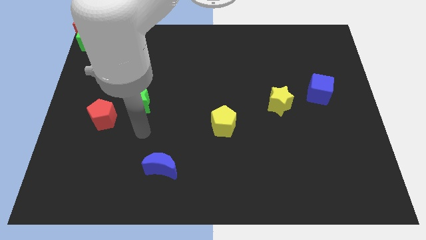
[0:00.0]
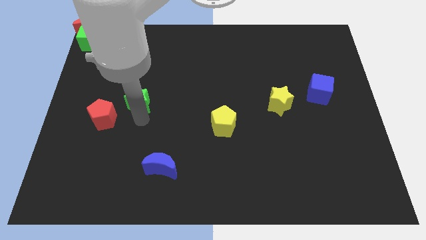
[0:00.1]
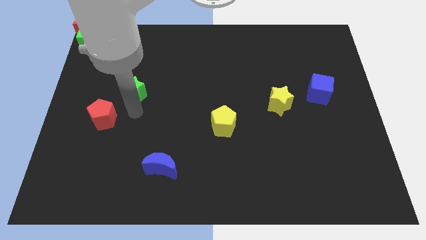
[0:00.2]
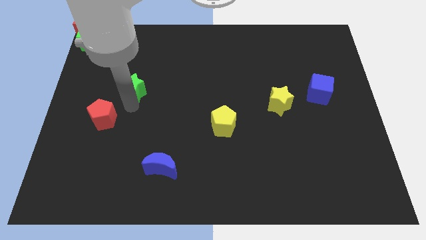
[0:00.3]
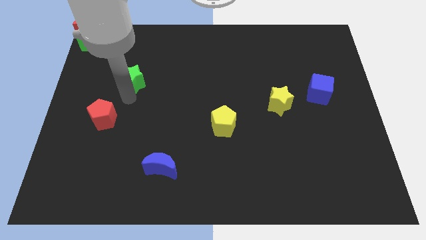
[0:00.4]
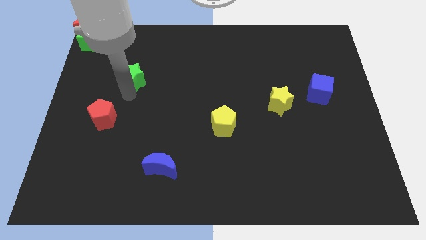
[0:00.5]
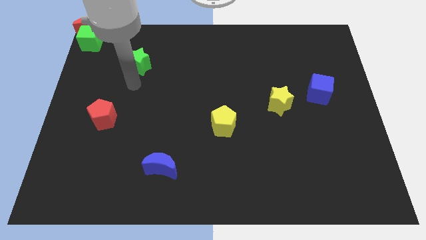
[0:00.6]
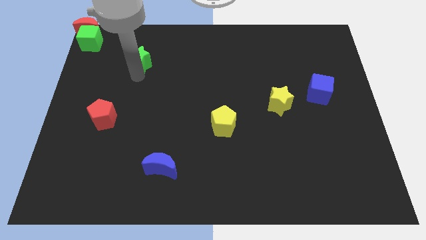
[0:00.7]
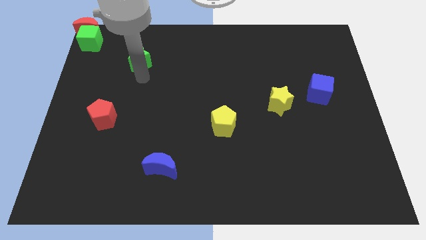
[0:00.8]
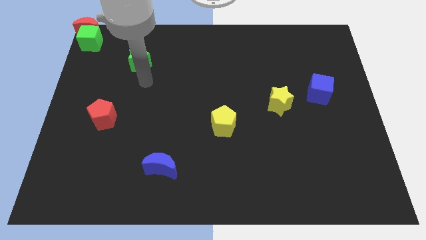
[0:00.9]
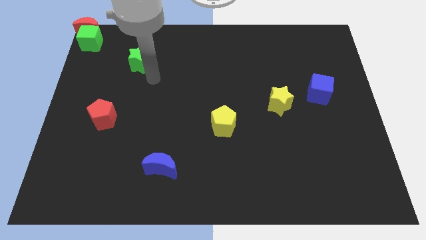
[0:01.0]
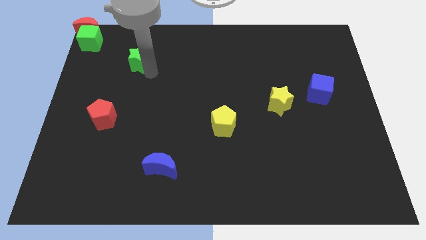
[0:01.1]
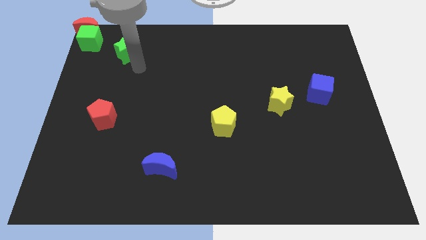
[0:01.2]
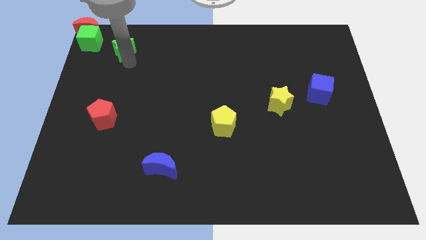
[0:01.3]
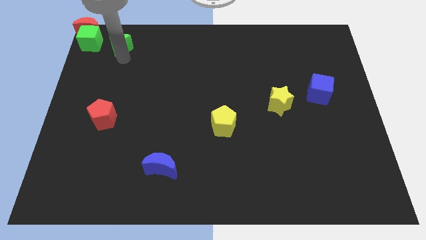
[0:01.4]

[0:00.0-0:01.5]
push the green star towards the green cube

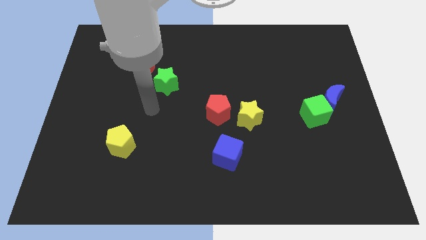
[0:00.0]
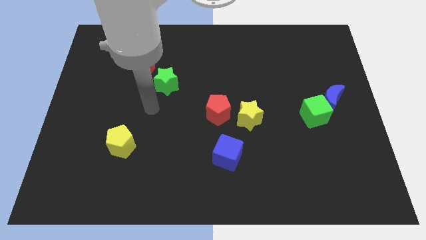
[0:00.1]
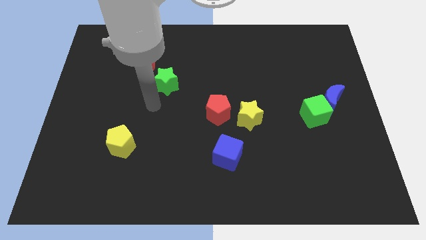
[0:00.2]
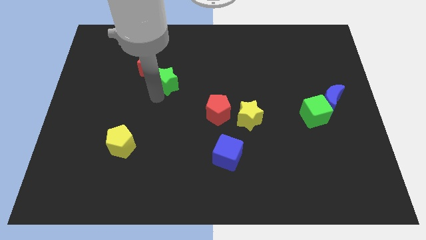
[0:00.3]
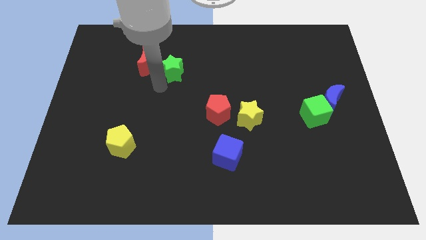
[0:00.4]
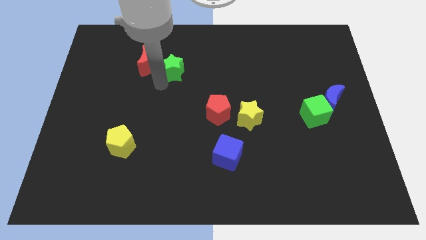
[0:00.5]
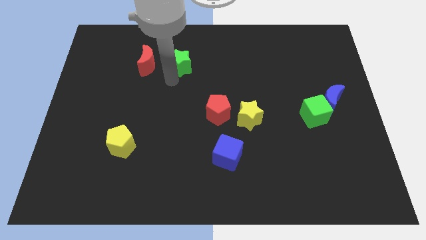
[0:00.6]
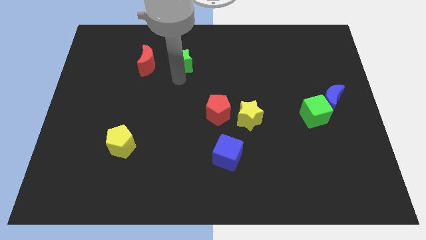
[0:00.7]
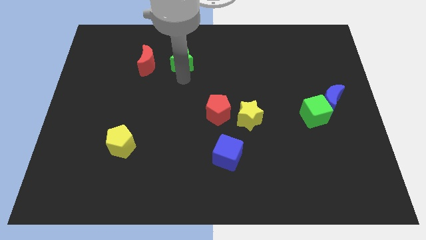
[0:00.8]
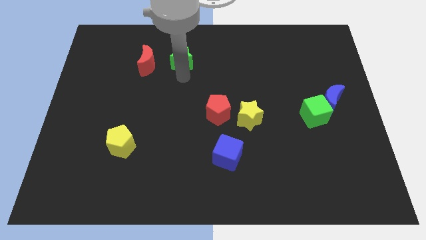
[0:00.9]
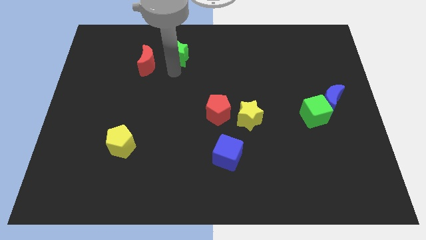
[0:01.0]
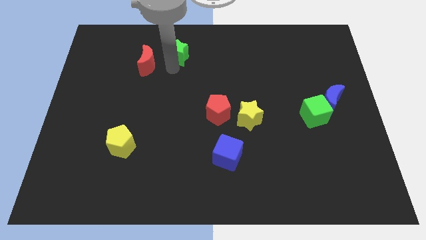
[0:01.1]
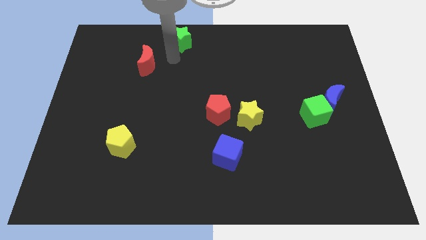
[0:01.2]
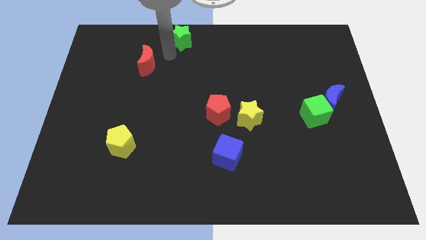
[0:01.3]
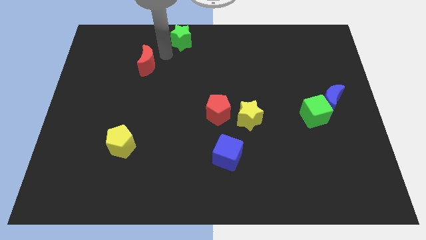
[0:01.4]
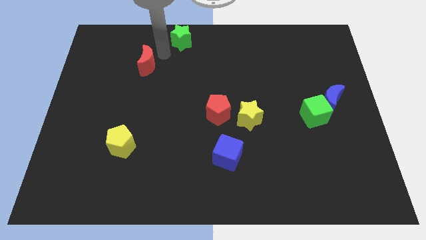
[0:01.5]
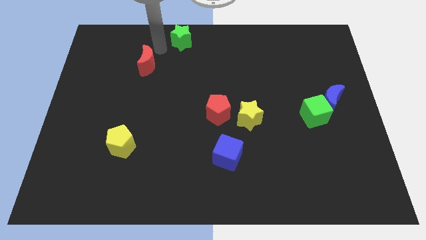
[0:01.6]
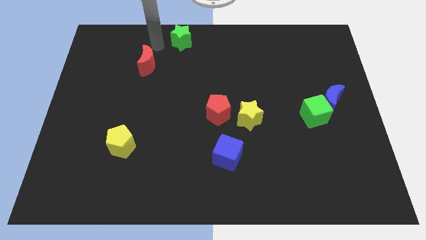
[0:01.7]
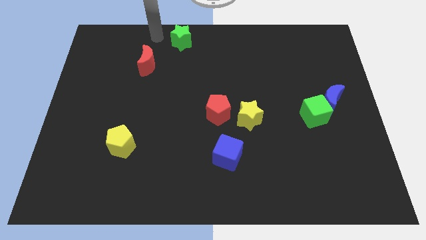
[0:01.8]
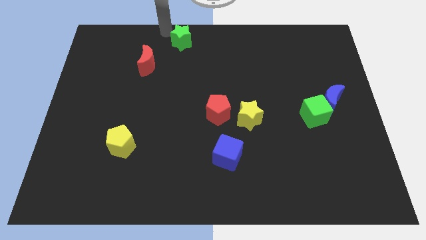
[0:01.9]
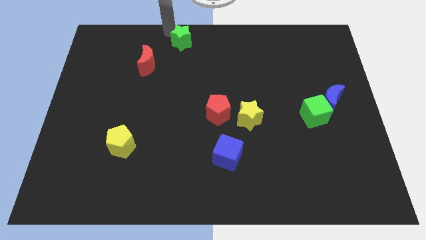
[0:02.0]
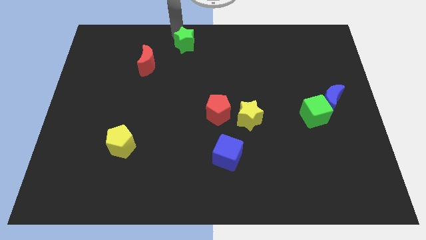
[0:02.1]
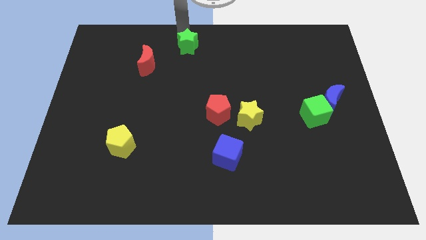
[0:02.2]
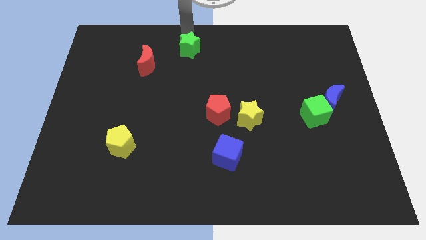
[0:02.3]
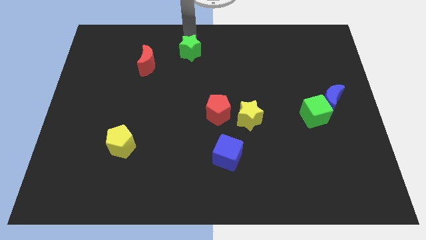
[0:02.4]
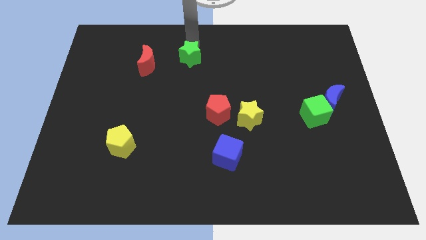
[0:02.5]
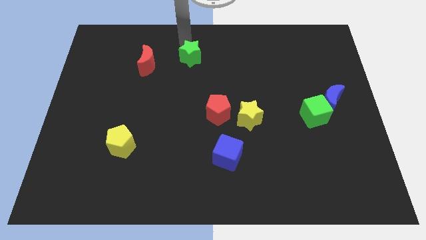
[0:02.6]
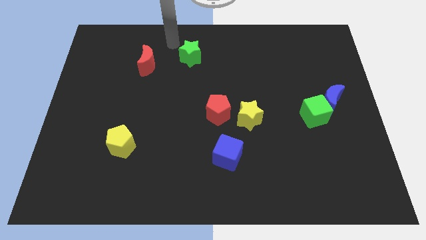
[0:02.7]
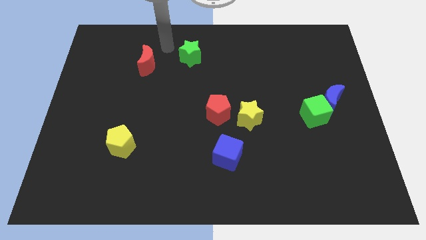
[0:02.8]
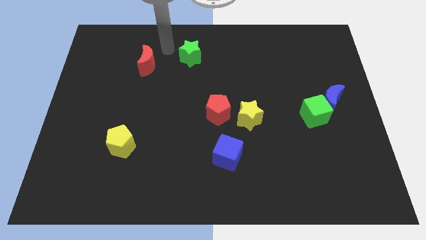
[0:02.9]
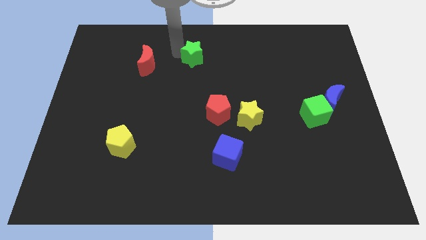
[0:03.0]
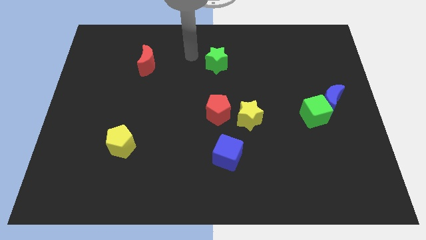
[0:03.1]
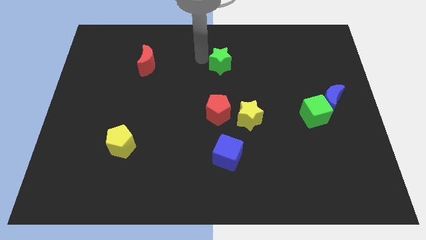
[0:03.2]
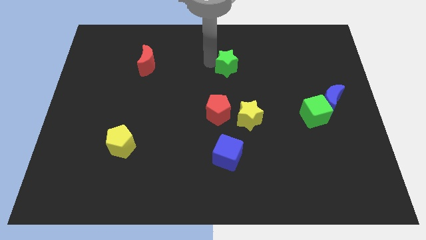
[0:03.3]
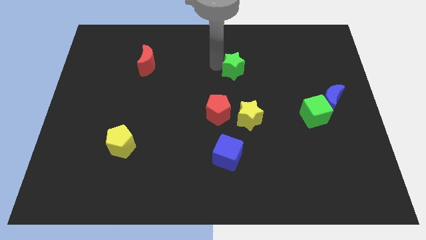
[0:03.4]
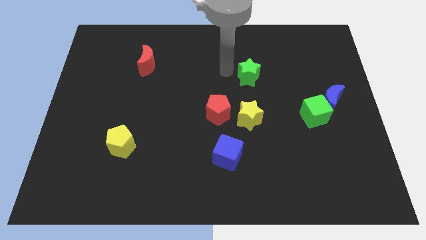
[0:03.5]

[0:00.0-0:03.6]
place the green star above the yellow star

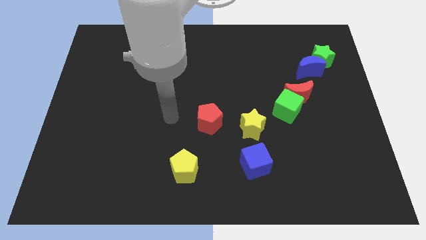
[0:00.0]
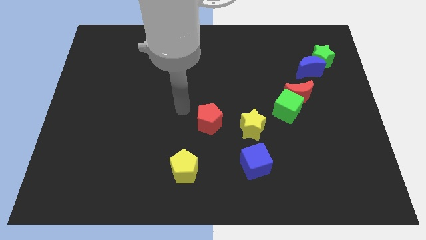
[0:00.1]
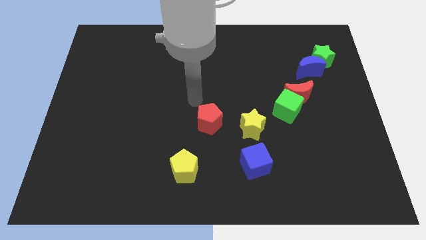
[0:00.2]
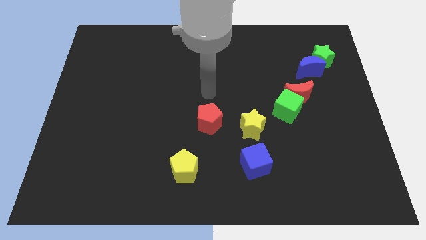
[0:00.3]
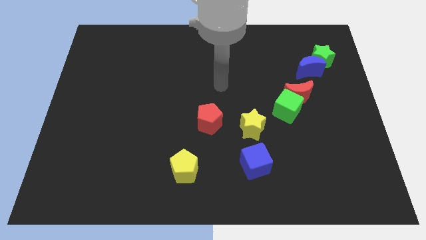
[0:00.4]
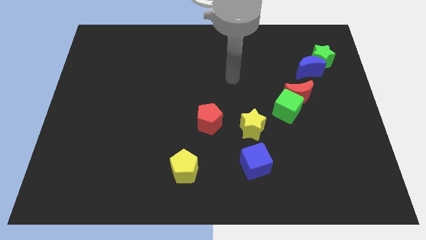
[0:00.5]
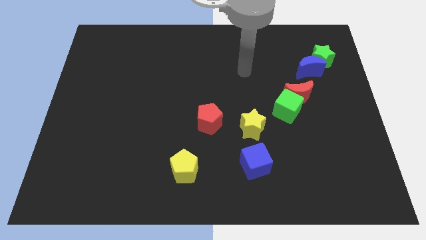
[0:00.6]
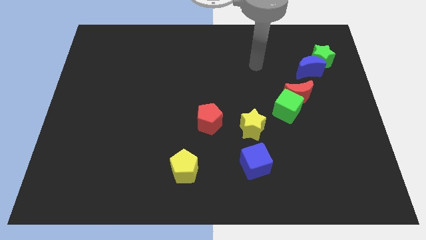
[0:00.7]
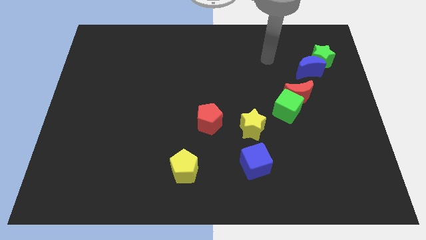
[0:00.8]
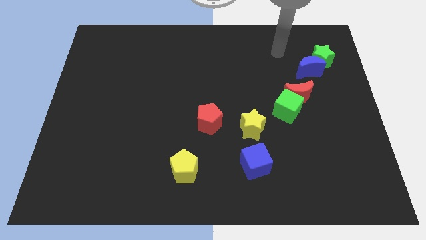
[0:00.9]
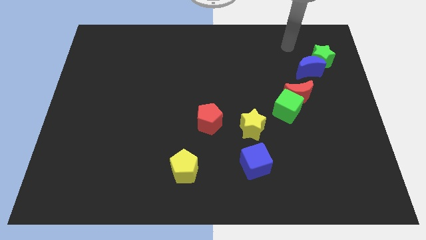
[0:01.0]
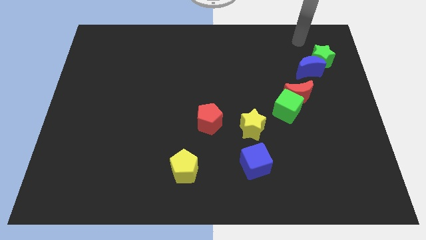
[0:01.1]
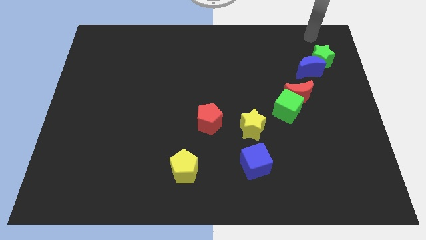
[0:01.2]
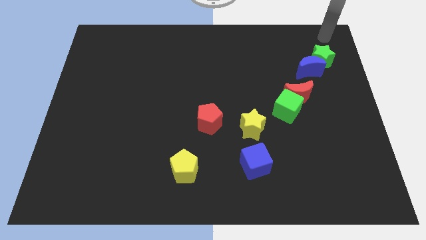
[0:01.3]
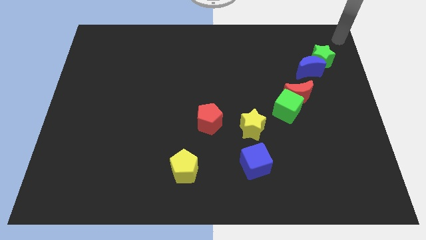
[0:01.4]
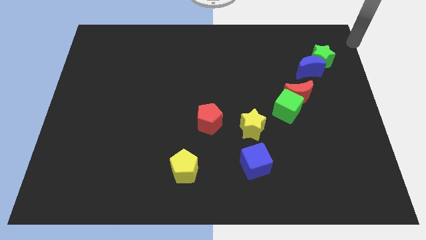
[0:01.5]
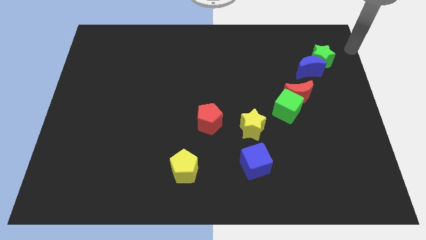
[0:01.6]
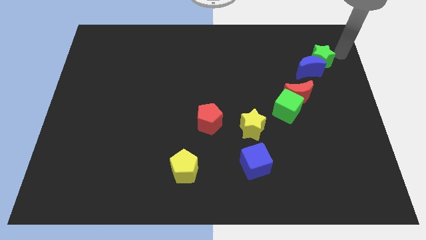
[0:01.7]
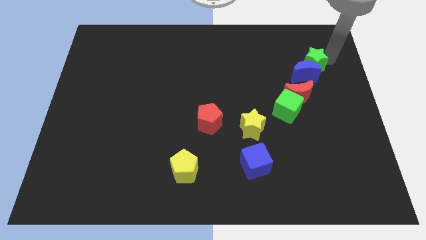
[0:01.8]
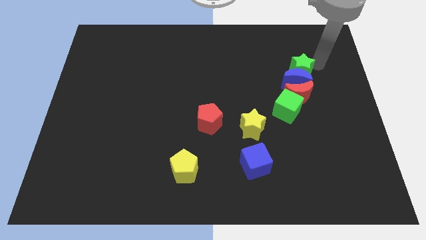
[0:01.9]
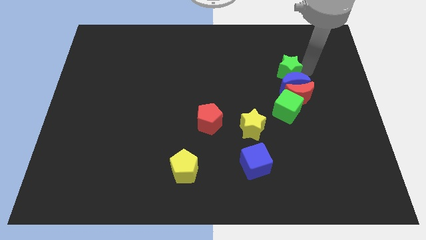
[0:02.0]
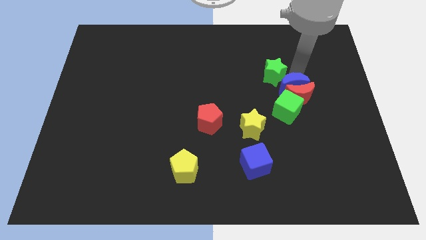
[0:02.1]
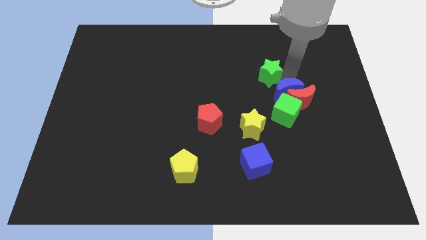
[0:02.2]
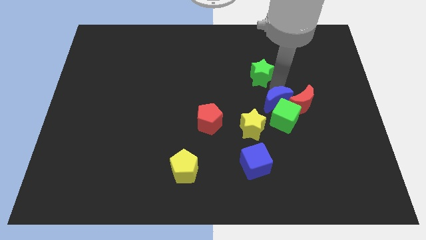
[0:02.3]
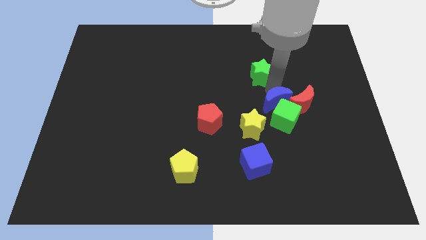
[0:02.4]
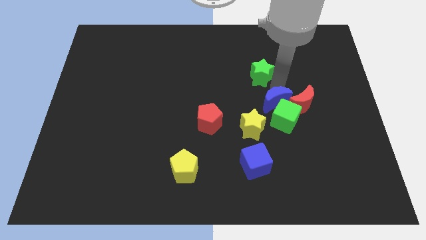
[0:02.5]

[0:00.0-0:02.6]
slightly move the green star

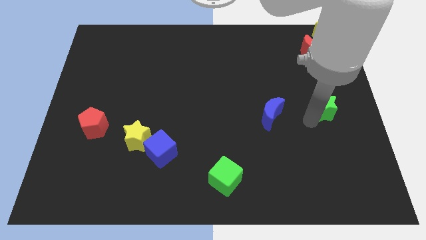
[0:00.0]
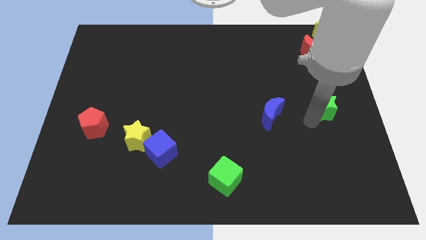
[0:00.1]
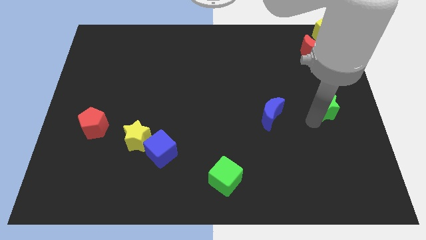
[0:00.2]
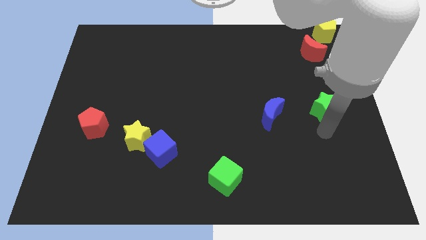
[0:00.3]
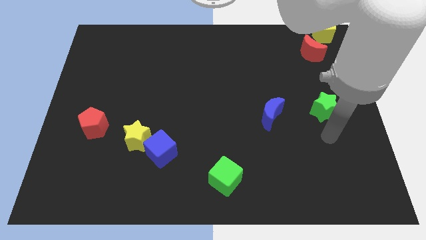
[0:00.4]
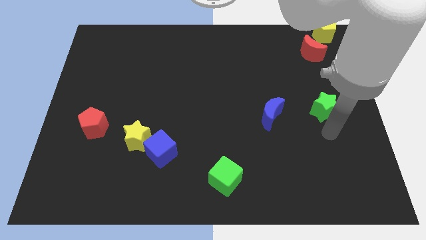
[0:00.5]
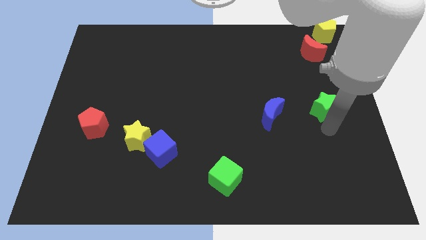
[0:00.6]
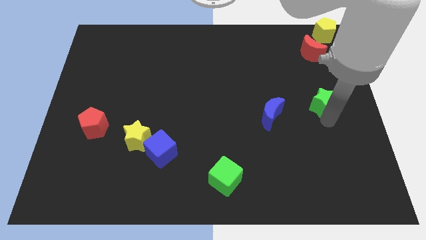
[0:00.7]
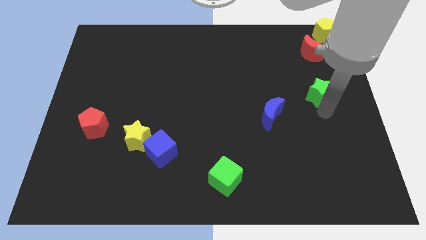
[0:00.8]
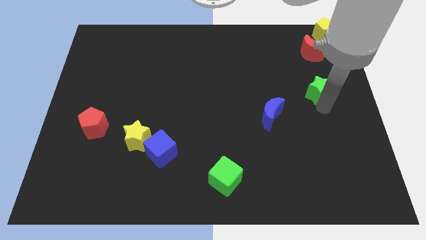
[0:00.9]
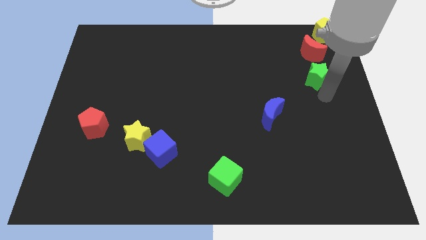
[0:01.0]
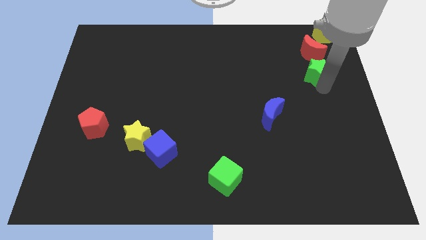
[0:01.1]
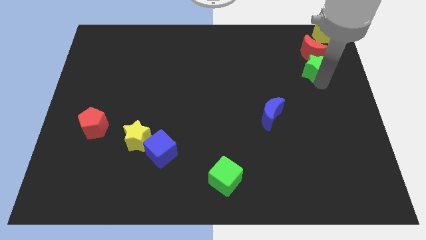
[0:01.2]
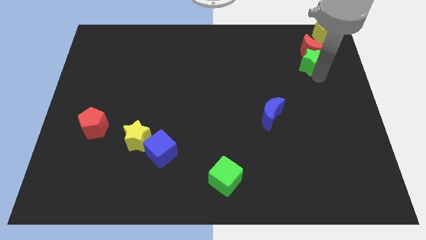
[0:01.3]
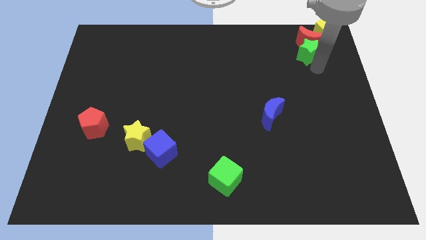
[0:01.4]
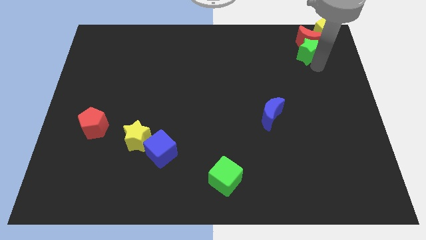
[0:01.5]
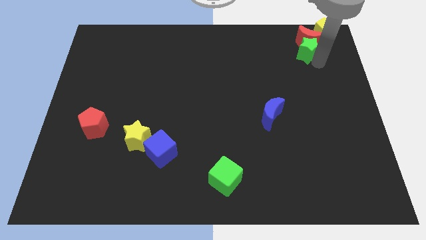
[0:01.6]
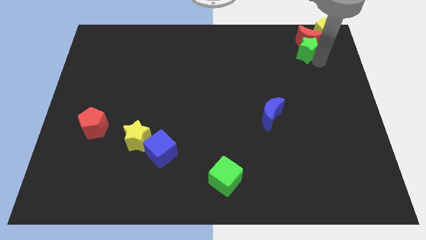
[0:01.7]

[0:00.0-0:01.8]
push green star into red moon
